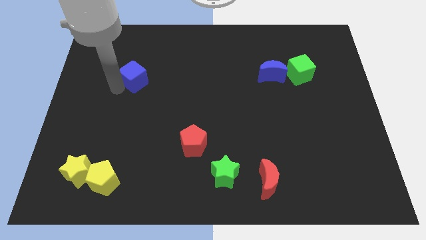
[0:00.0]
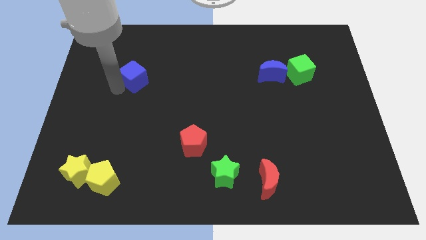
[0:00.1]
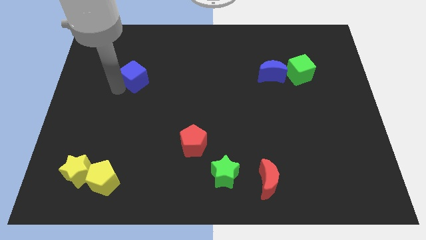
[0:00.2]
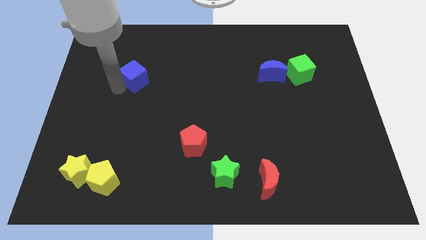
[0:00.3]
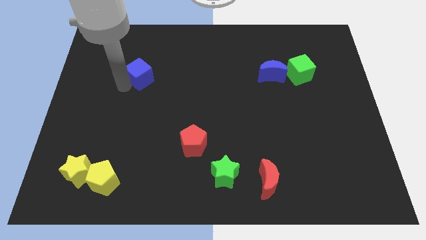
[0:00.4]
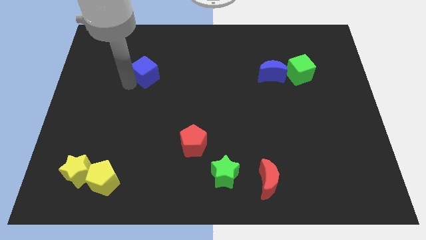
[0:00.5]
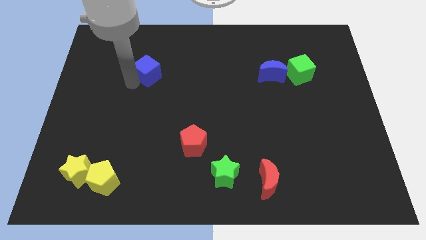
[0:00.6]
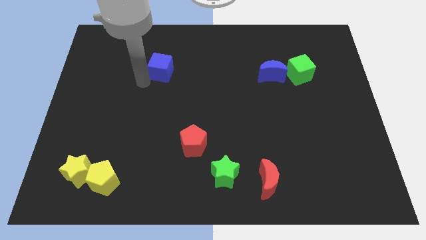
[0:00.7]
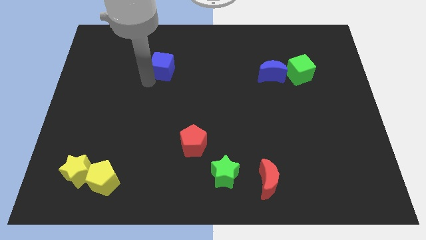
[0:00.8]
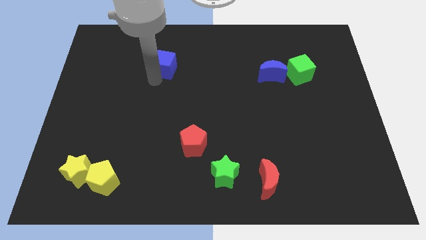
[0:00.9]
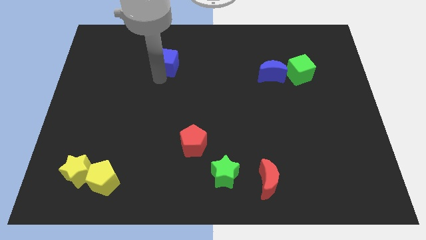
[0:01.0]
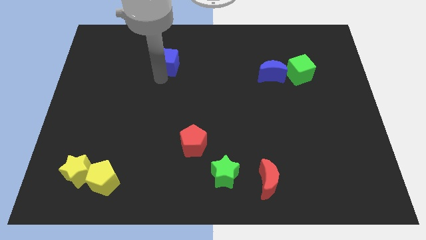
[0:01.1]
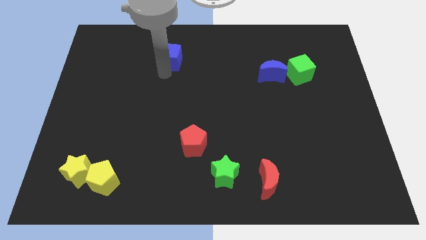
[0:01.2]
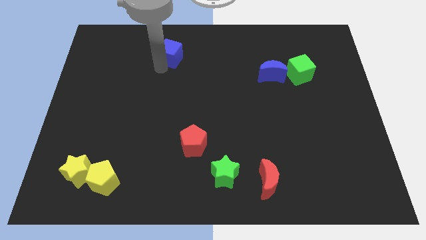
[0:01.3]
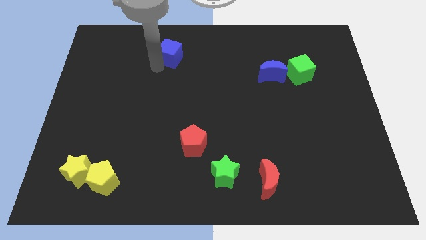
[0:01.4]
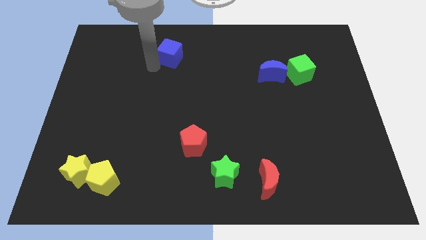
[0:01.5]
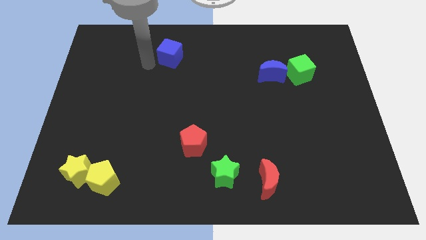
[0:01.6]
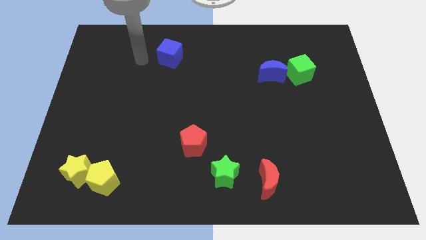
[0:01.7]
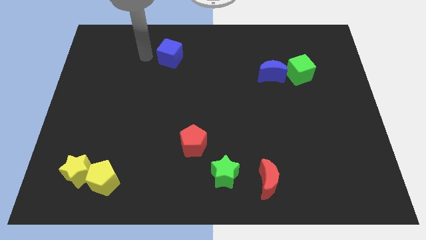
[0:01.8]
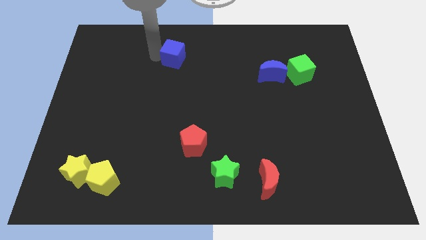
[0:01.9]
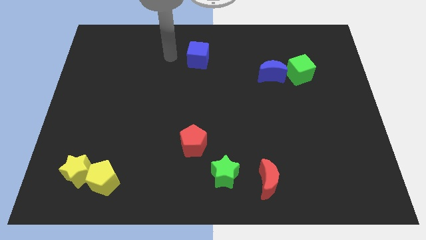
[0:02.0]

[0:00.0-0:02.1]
push the blue cube to the top of red pentagon

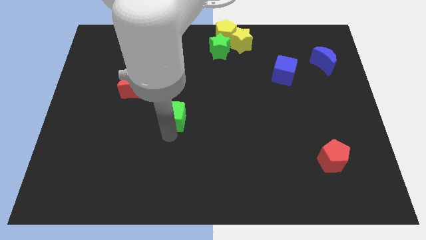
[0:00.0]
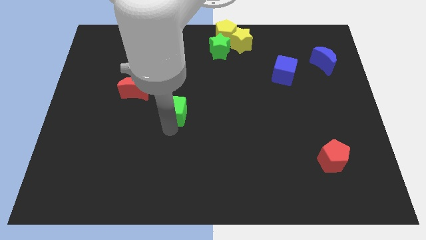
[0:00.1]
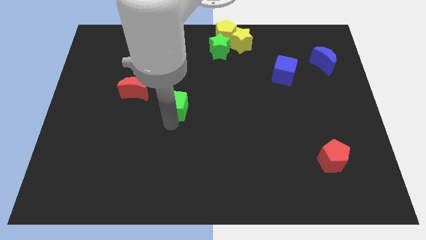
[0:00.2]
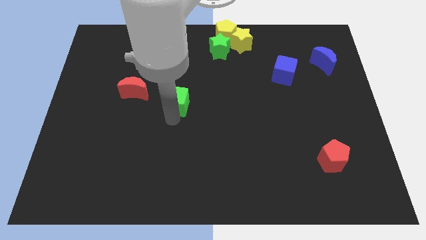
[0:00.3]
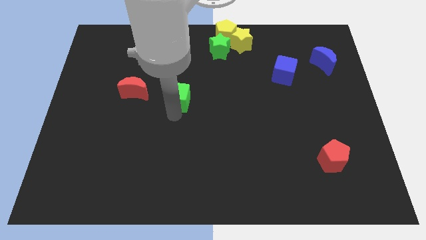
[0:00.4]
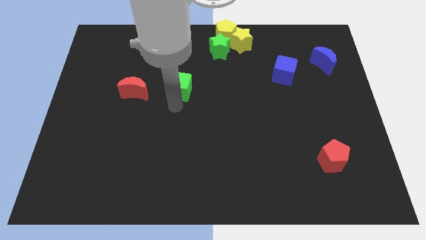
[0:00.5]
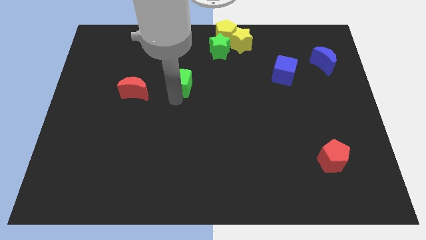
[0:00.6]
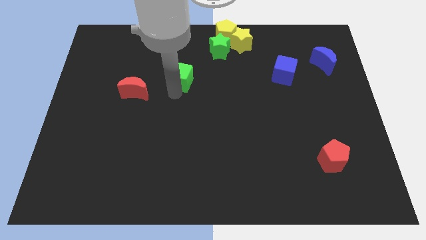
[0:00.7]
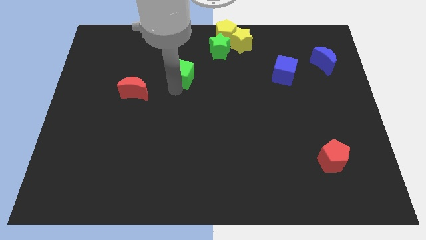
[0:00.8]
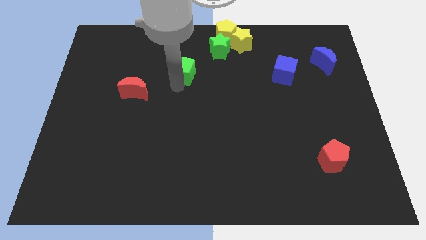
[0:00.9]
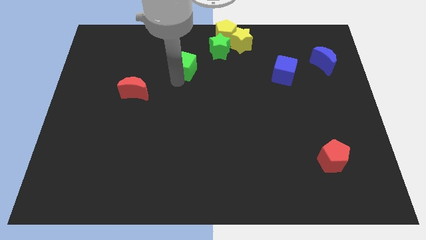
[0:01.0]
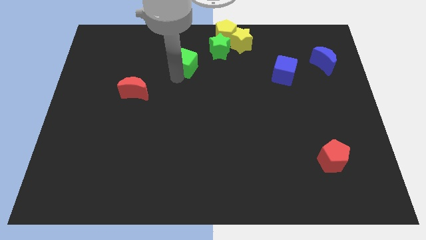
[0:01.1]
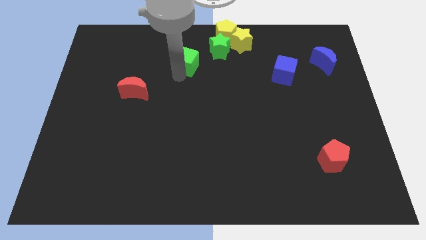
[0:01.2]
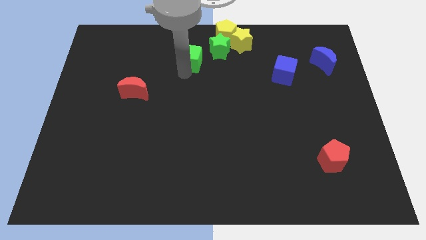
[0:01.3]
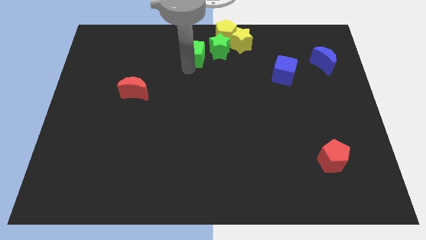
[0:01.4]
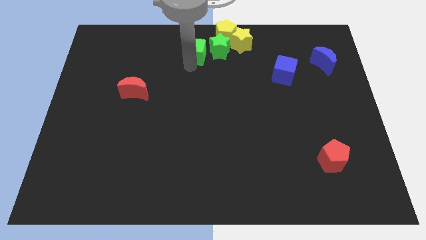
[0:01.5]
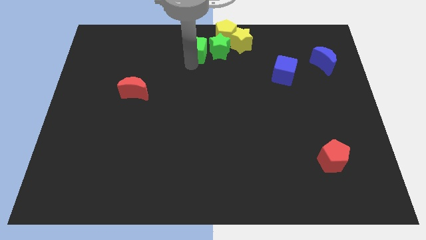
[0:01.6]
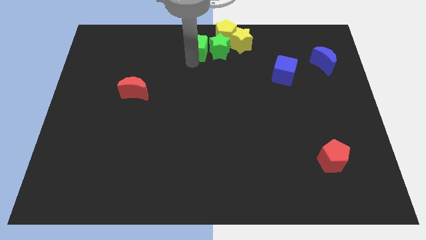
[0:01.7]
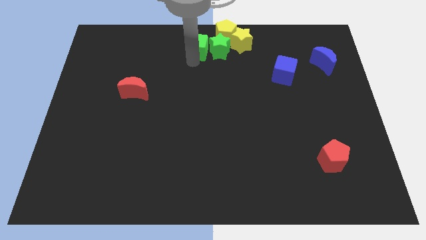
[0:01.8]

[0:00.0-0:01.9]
push the green cube to the top left of the green star

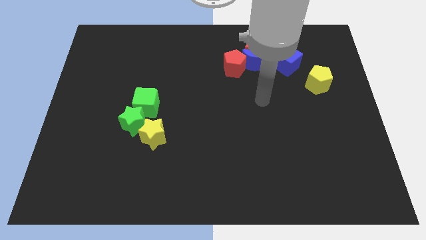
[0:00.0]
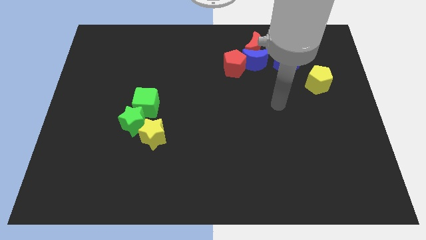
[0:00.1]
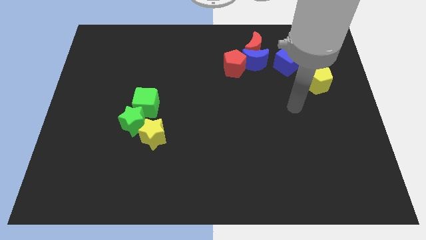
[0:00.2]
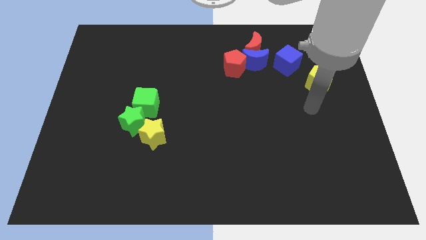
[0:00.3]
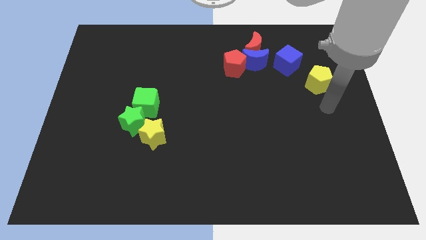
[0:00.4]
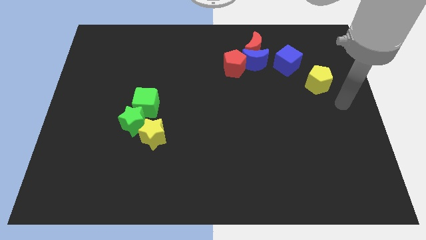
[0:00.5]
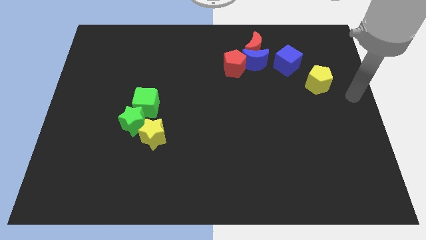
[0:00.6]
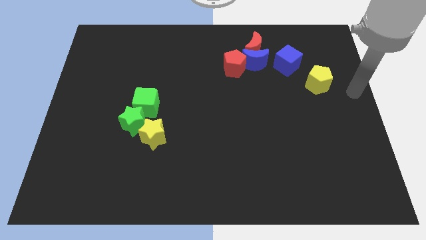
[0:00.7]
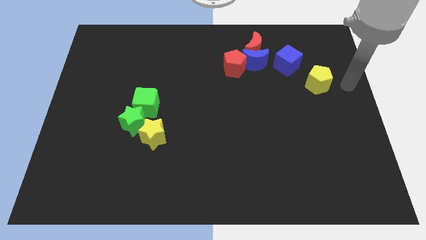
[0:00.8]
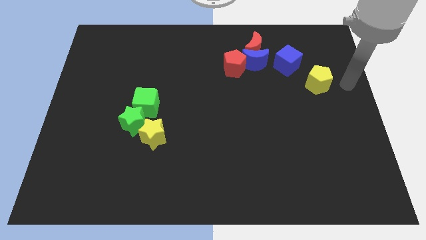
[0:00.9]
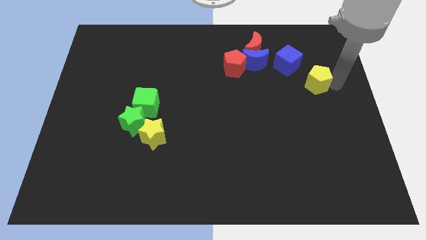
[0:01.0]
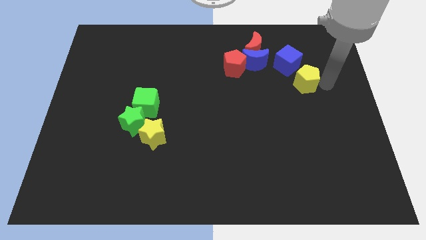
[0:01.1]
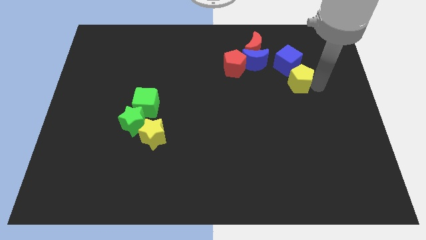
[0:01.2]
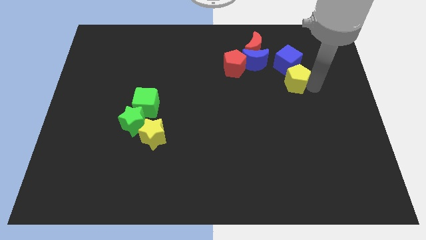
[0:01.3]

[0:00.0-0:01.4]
slightly push the yellow pentagon to the bottom side of the blue cube

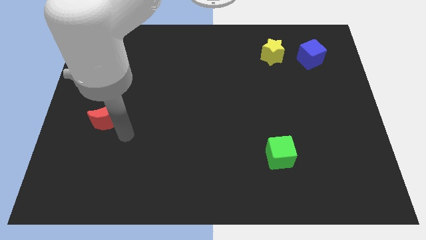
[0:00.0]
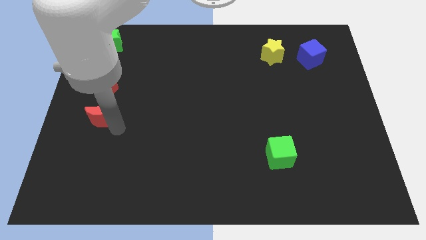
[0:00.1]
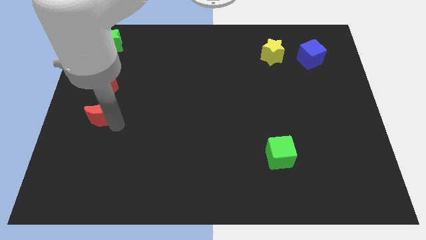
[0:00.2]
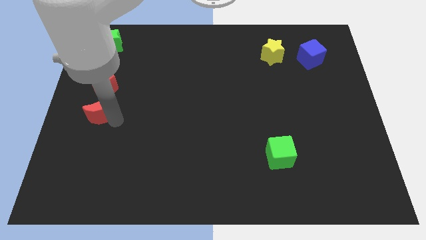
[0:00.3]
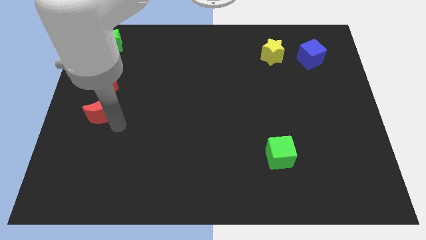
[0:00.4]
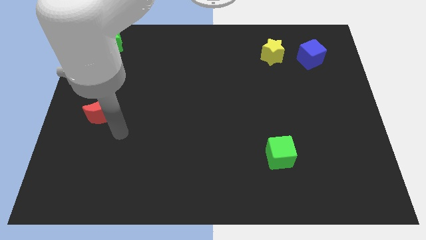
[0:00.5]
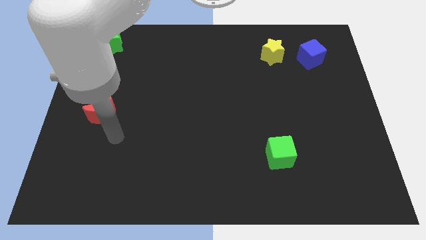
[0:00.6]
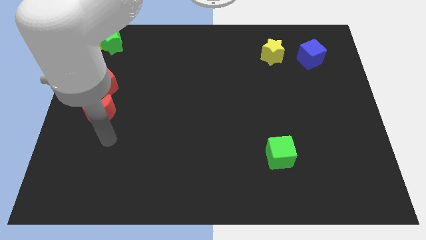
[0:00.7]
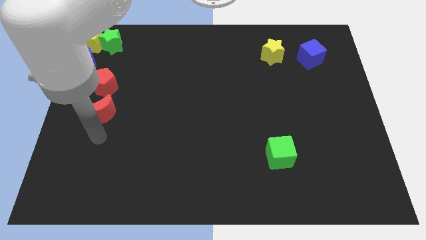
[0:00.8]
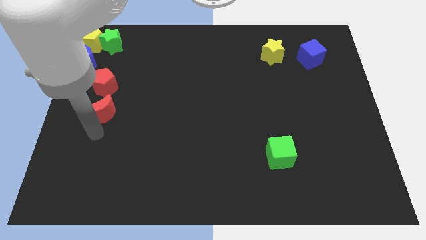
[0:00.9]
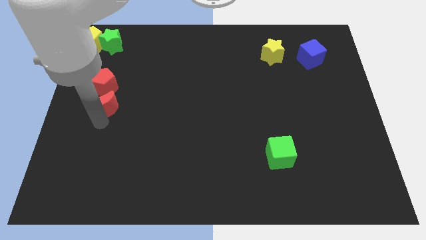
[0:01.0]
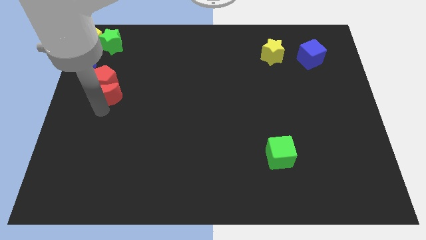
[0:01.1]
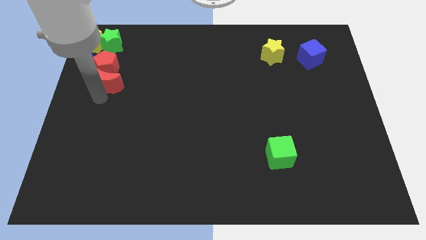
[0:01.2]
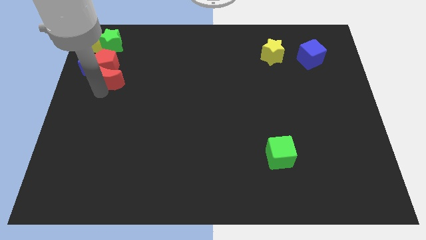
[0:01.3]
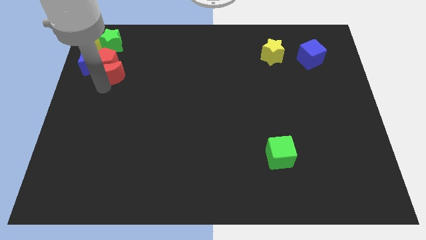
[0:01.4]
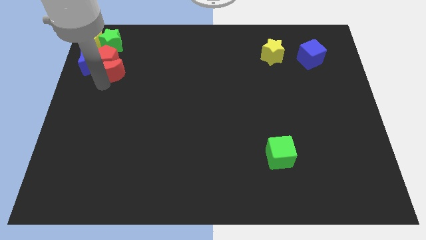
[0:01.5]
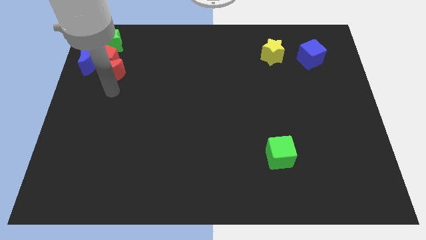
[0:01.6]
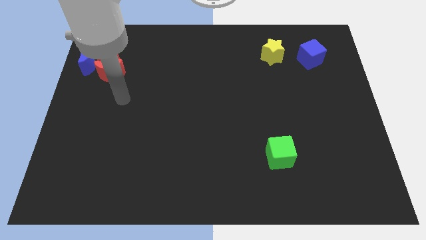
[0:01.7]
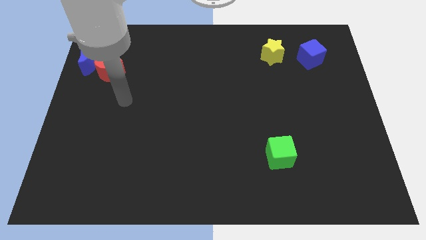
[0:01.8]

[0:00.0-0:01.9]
place the red moon below the red pentagon

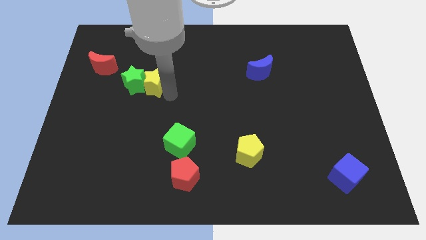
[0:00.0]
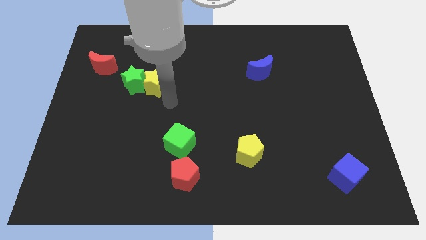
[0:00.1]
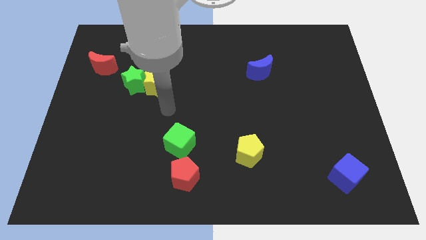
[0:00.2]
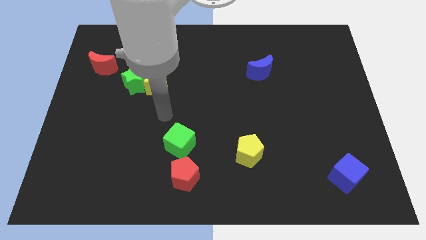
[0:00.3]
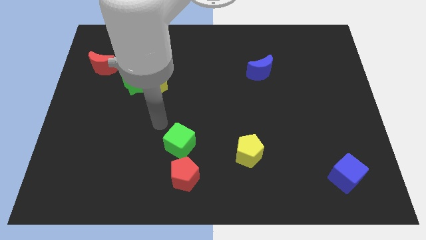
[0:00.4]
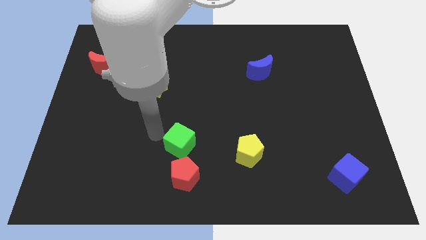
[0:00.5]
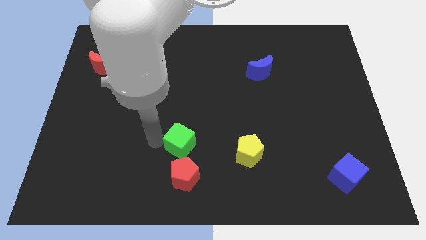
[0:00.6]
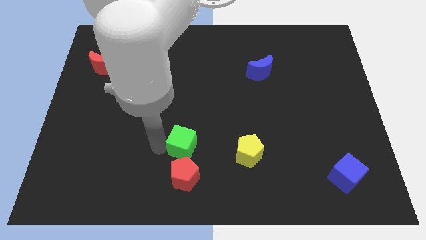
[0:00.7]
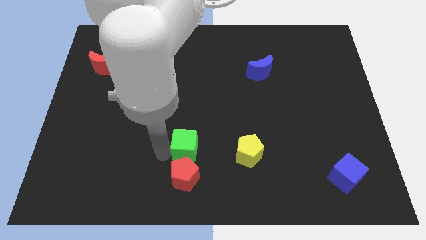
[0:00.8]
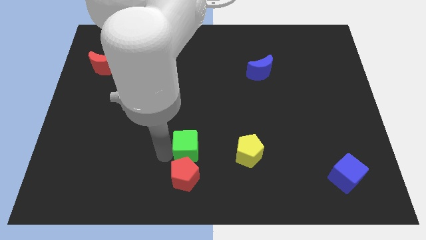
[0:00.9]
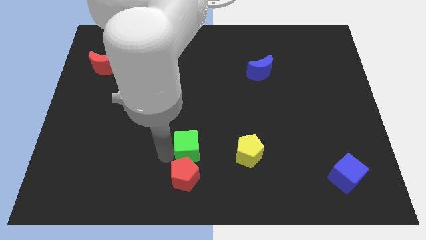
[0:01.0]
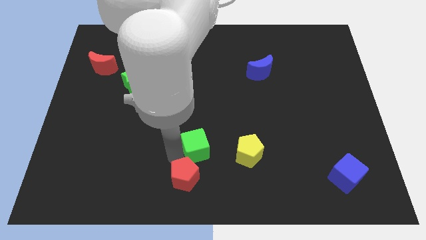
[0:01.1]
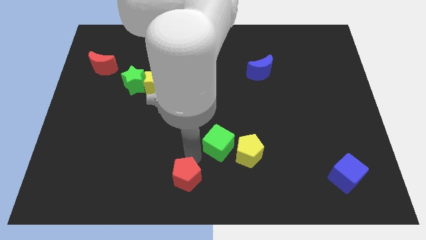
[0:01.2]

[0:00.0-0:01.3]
put the green cube diagonally top right to the red pentagon

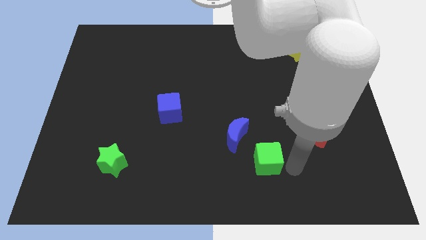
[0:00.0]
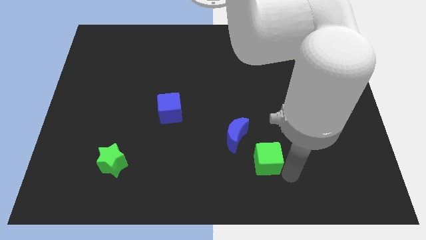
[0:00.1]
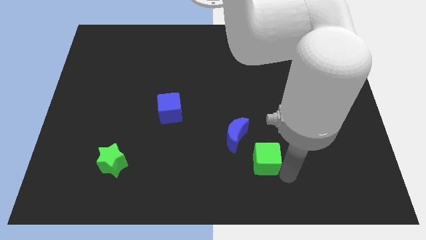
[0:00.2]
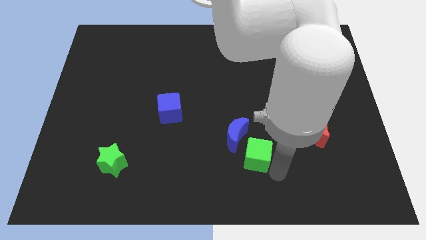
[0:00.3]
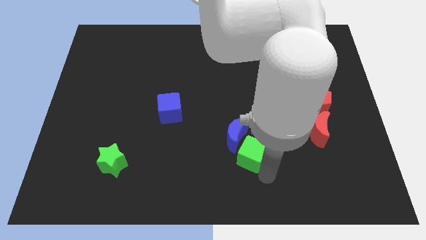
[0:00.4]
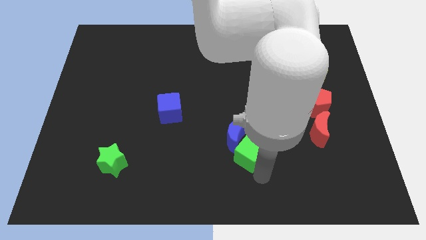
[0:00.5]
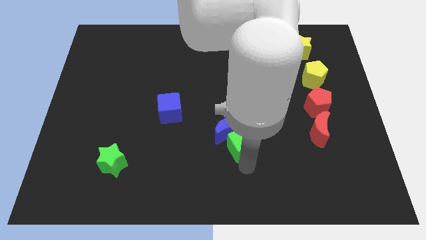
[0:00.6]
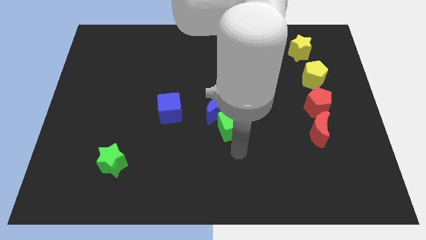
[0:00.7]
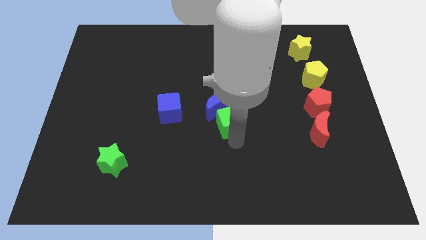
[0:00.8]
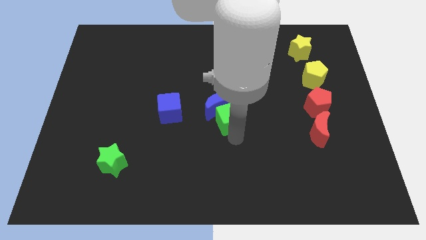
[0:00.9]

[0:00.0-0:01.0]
push green cube into blue moon
